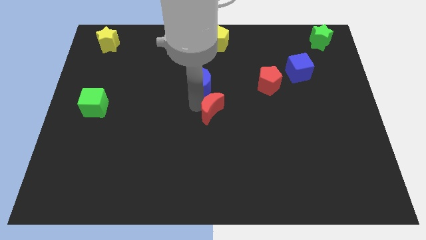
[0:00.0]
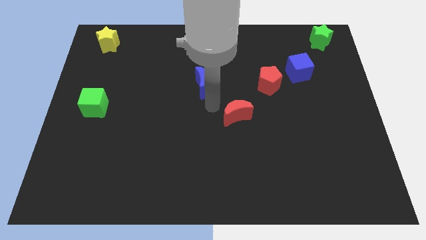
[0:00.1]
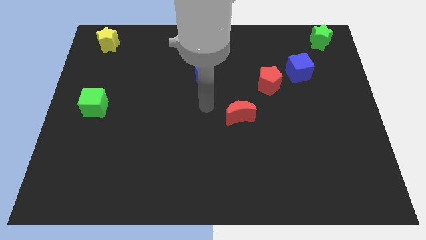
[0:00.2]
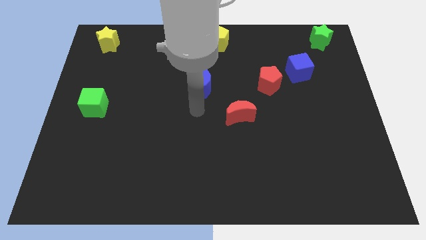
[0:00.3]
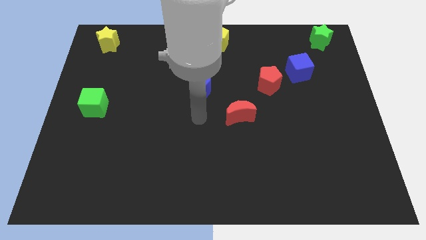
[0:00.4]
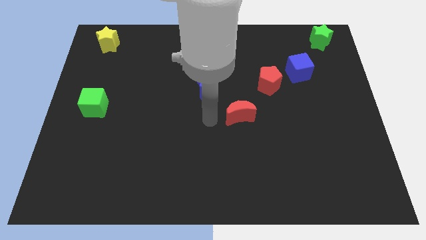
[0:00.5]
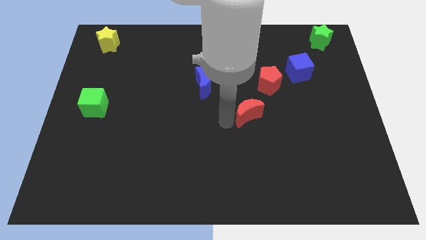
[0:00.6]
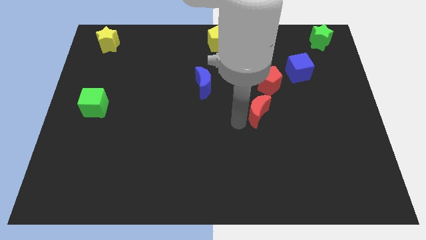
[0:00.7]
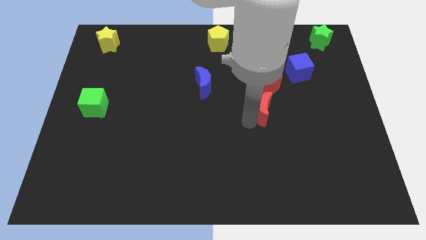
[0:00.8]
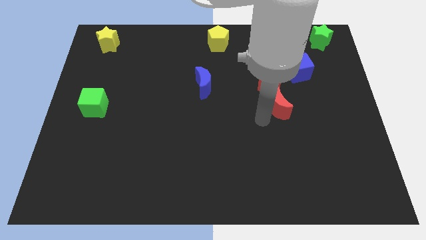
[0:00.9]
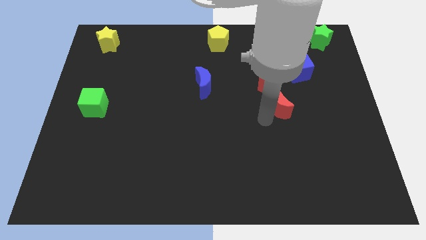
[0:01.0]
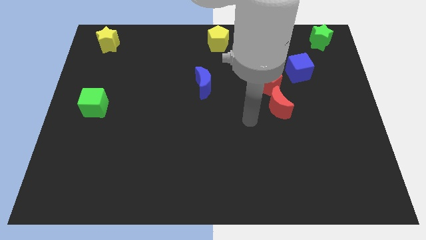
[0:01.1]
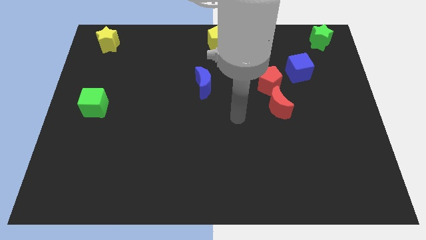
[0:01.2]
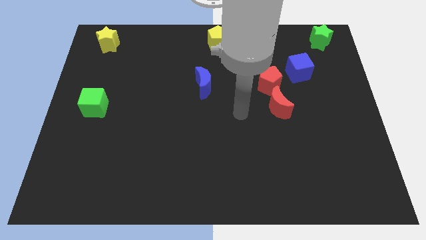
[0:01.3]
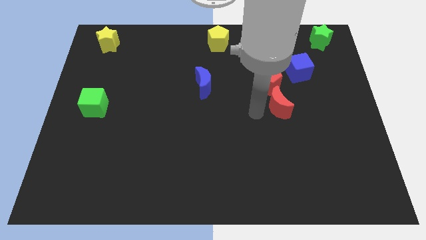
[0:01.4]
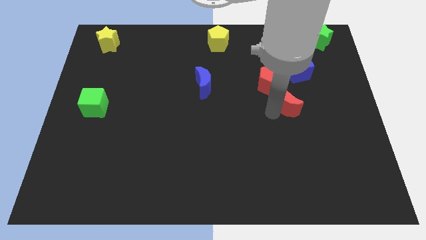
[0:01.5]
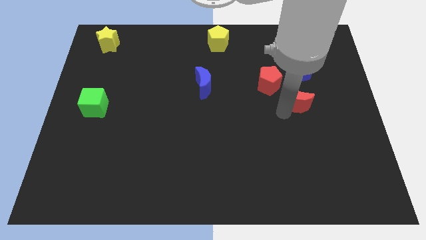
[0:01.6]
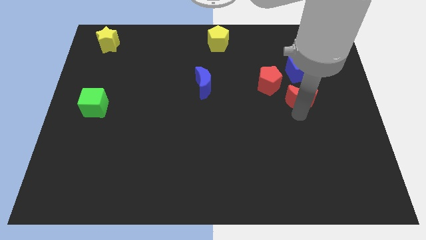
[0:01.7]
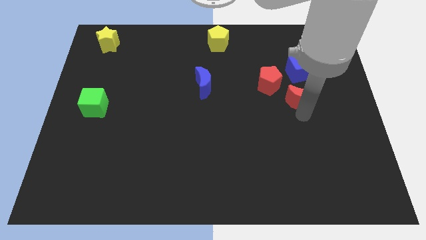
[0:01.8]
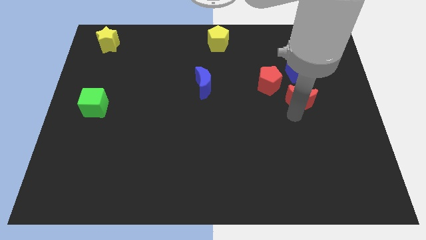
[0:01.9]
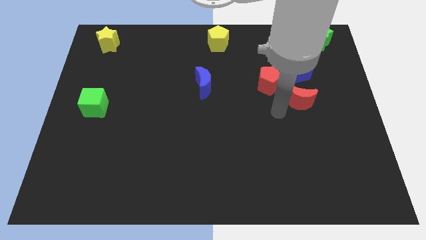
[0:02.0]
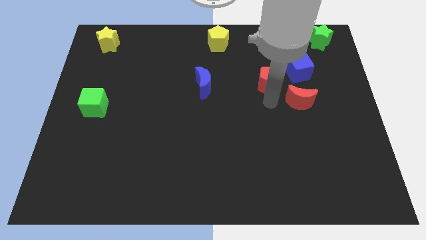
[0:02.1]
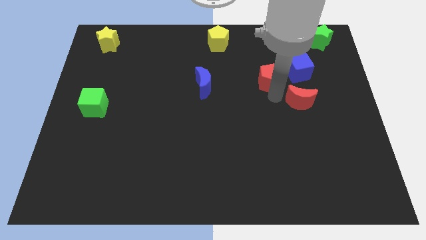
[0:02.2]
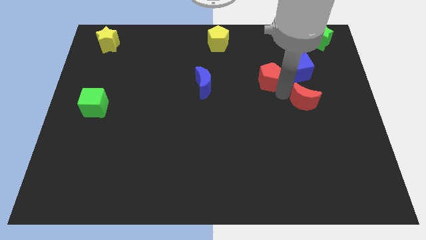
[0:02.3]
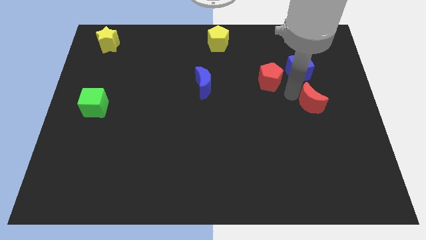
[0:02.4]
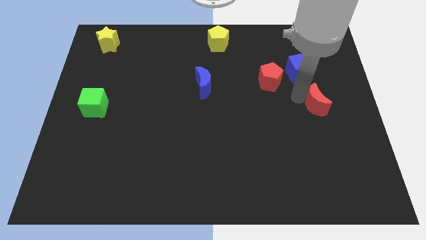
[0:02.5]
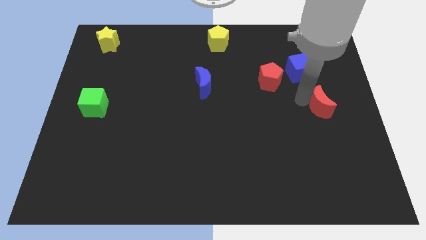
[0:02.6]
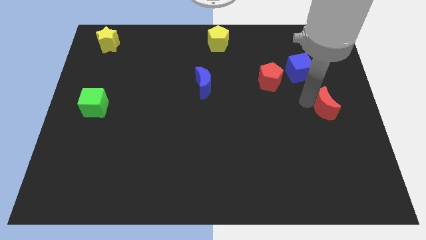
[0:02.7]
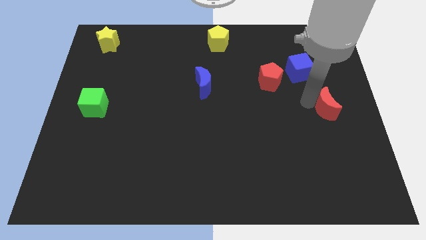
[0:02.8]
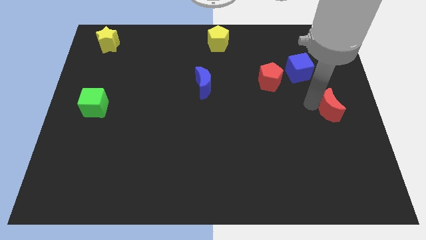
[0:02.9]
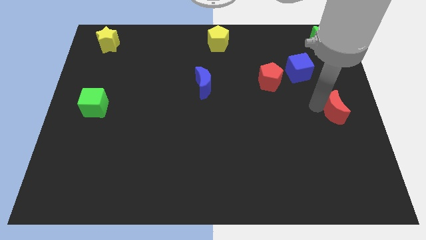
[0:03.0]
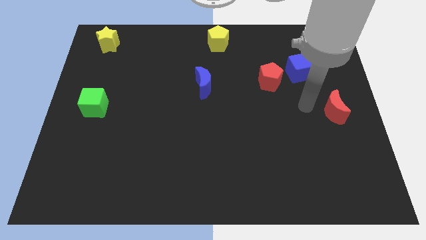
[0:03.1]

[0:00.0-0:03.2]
move the red crescent vertically below green star

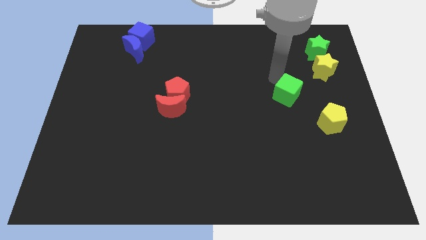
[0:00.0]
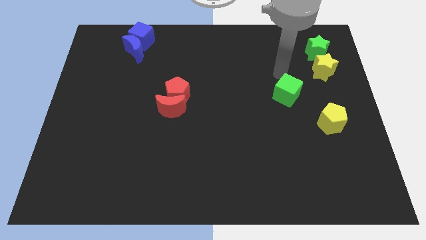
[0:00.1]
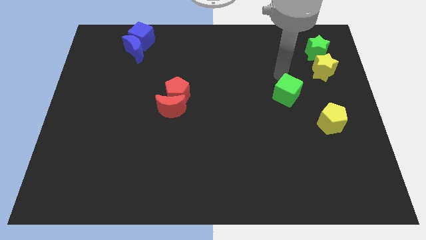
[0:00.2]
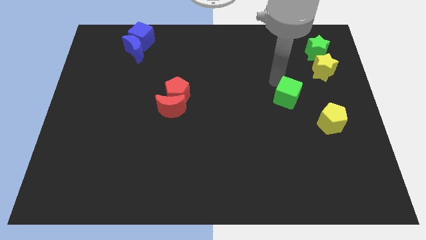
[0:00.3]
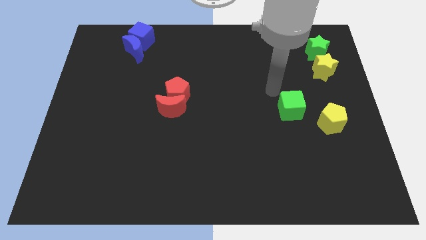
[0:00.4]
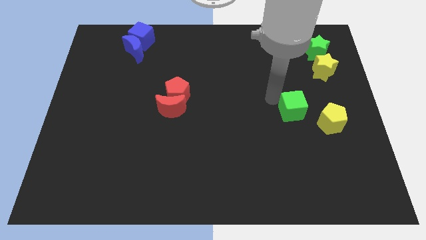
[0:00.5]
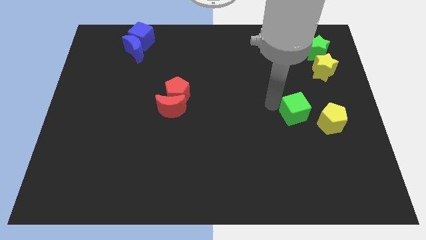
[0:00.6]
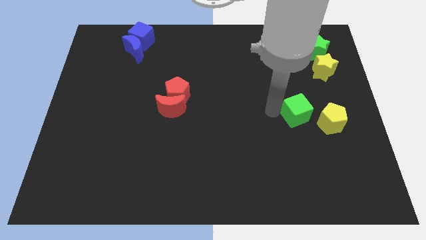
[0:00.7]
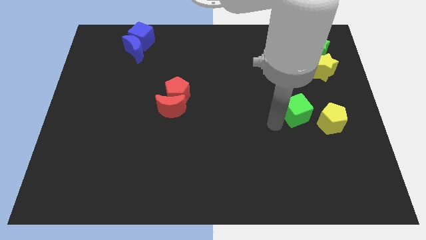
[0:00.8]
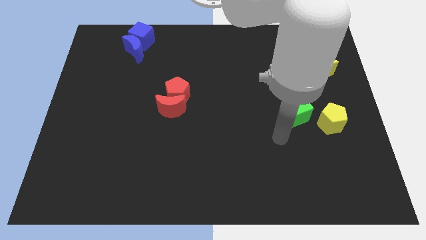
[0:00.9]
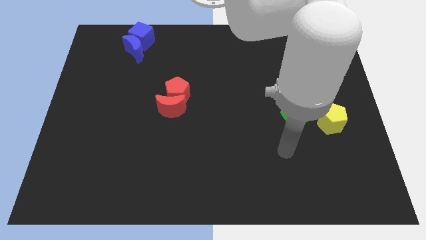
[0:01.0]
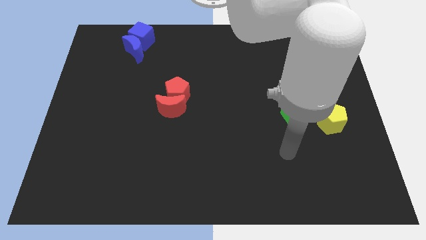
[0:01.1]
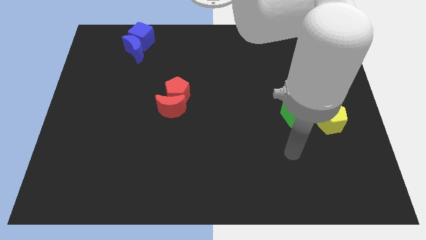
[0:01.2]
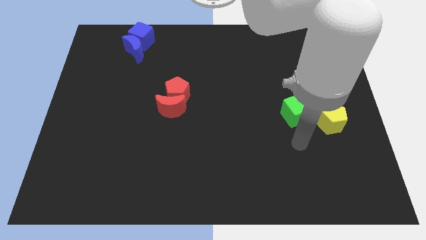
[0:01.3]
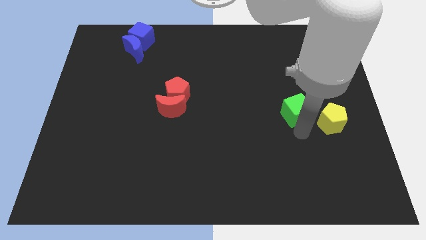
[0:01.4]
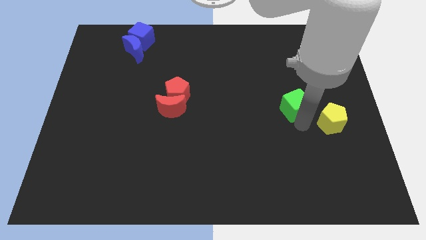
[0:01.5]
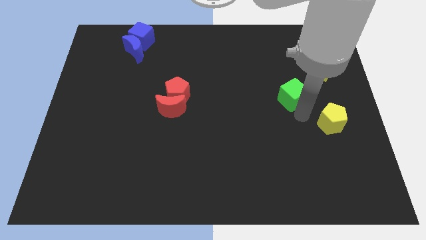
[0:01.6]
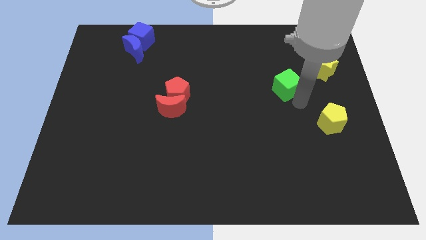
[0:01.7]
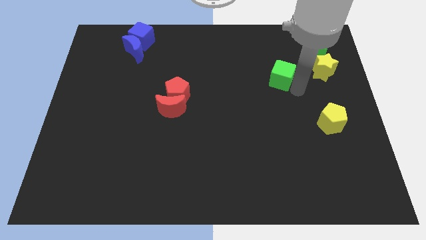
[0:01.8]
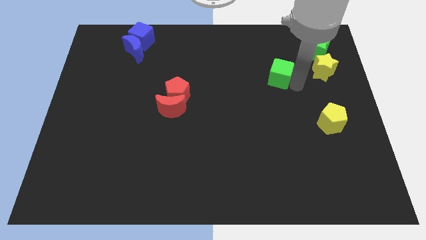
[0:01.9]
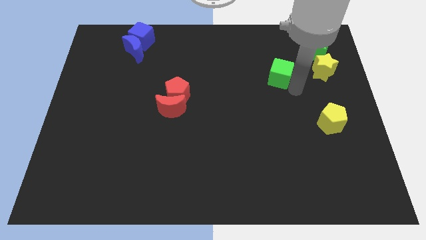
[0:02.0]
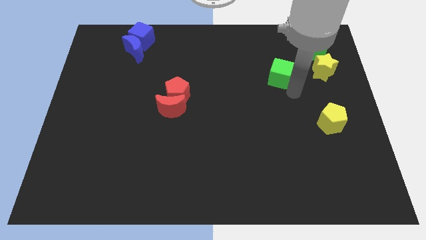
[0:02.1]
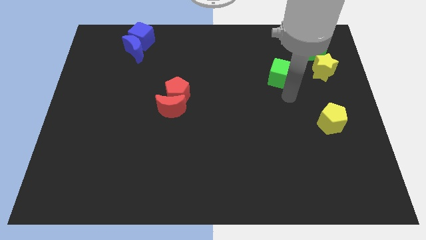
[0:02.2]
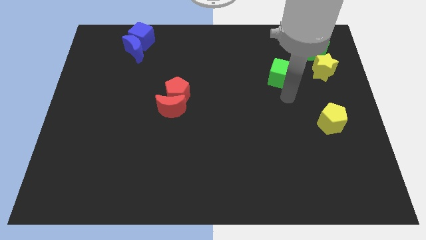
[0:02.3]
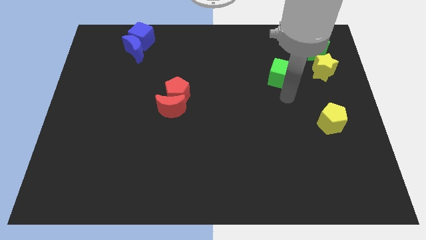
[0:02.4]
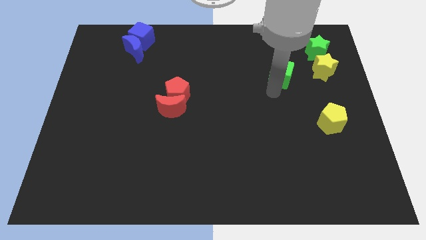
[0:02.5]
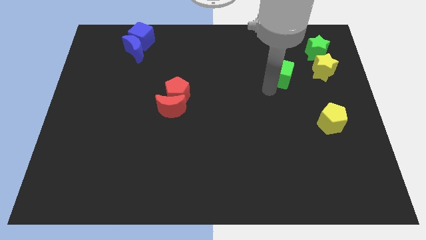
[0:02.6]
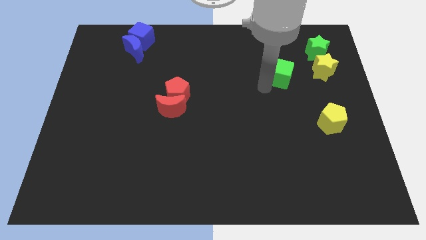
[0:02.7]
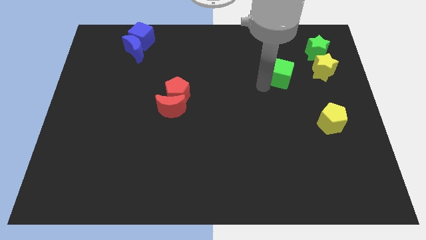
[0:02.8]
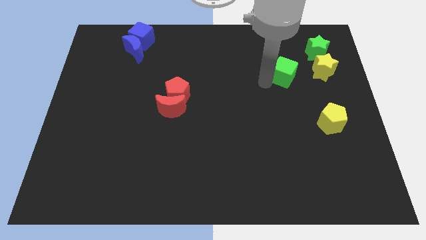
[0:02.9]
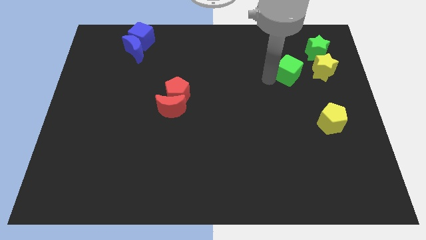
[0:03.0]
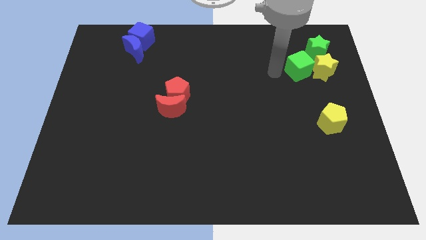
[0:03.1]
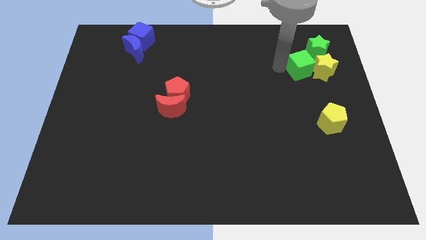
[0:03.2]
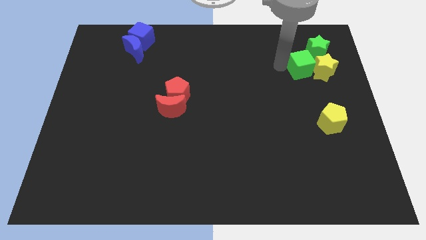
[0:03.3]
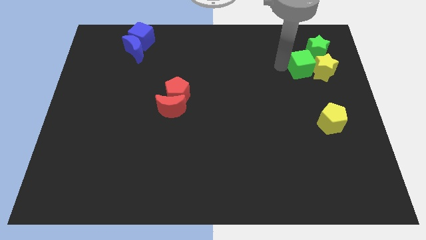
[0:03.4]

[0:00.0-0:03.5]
push the green cube into the yellow stasr

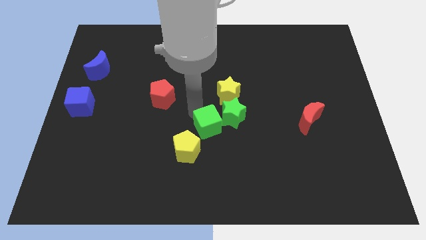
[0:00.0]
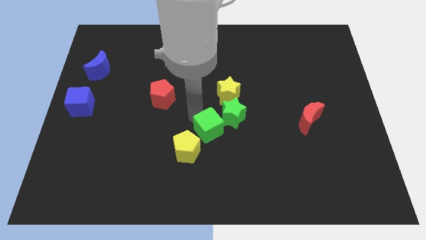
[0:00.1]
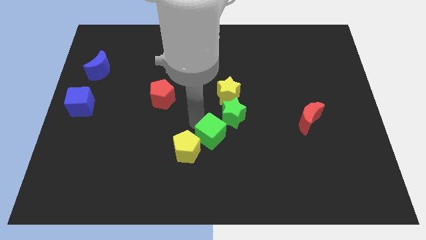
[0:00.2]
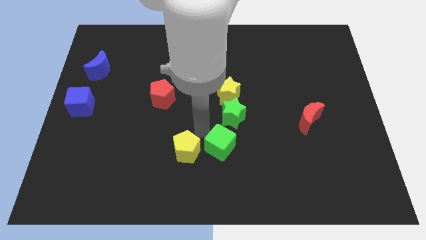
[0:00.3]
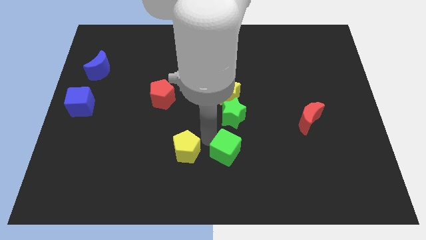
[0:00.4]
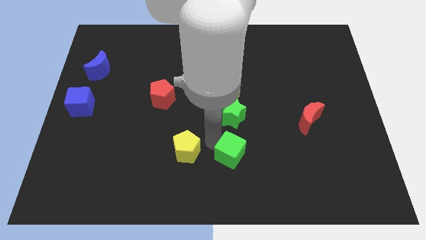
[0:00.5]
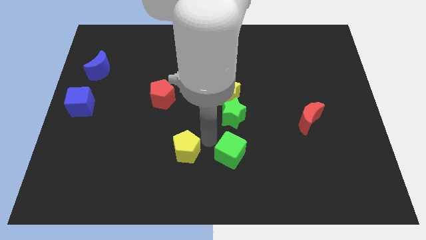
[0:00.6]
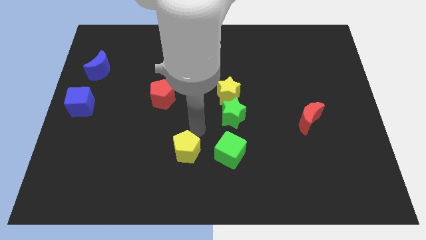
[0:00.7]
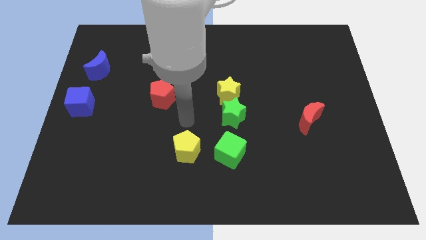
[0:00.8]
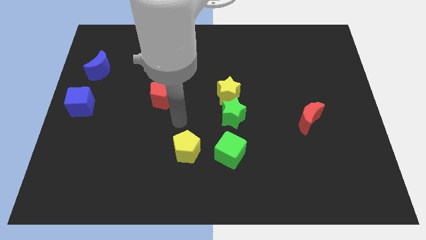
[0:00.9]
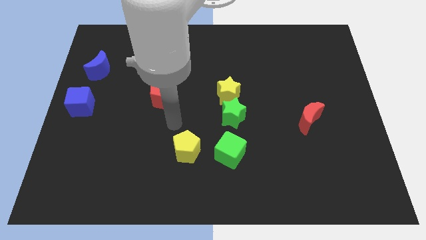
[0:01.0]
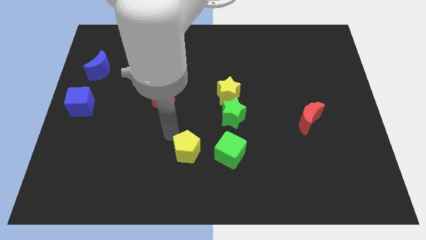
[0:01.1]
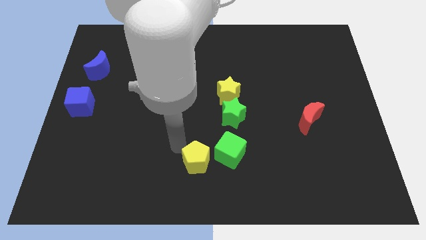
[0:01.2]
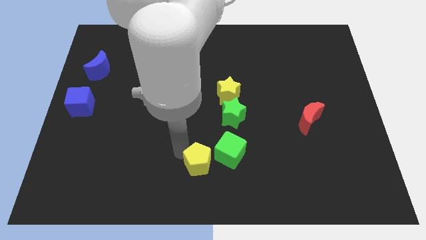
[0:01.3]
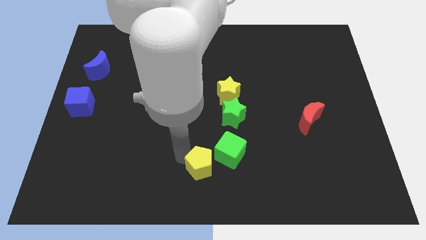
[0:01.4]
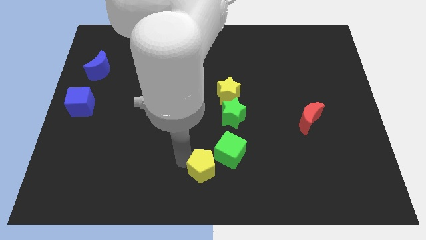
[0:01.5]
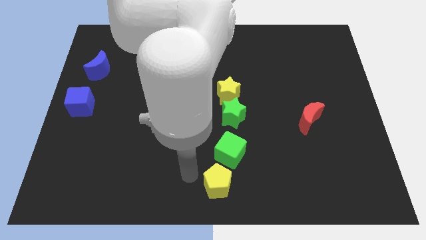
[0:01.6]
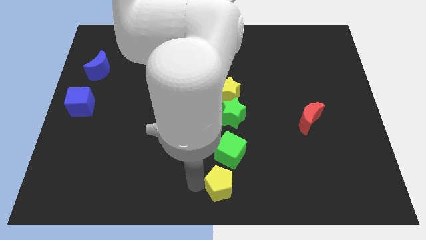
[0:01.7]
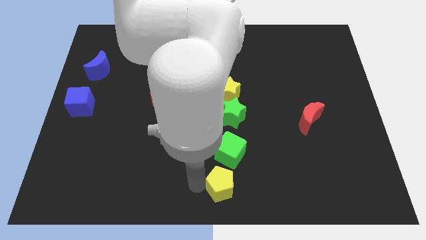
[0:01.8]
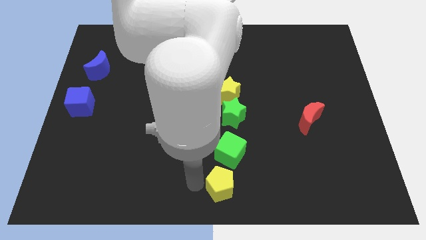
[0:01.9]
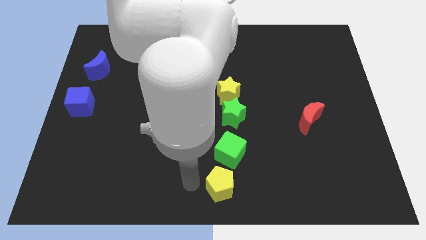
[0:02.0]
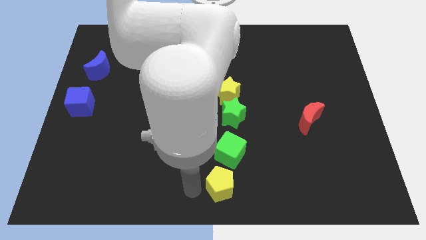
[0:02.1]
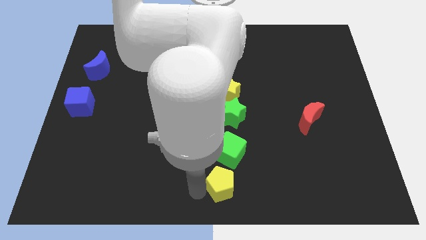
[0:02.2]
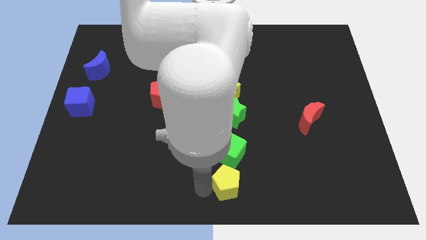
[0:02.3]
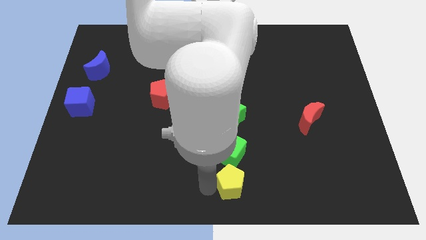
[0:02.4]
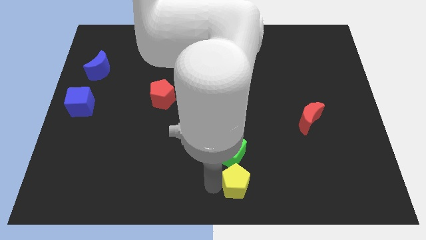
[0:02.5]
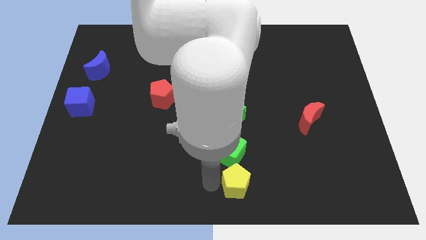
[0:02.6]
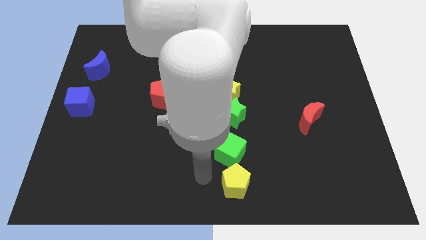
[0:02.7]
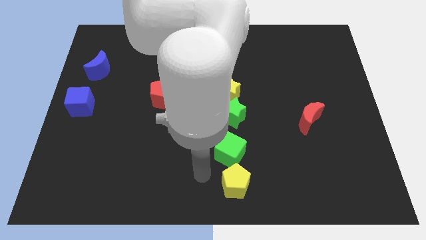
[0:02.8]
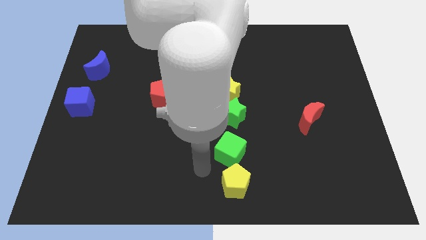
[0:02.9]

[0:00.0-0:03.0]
place the yellow pentagon to the bottom of the green cube
